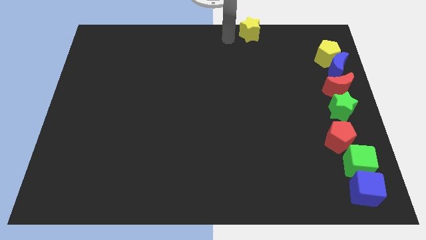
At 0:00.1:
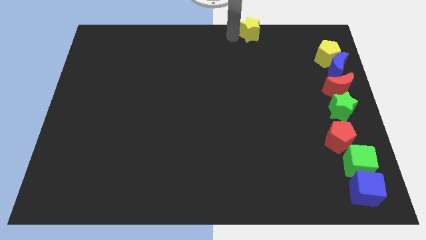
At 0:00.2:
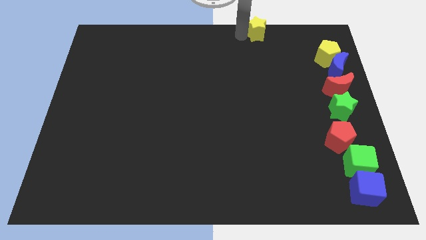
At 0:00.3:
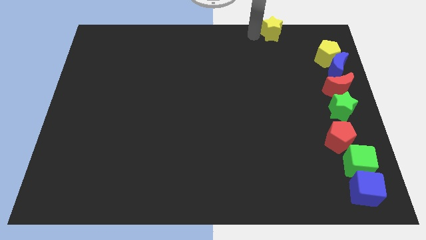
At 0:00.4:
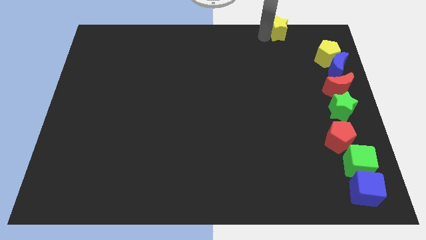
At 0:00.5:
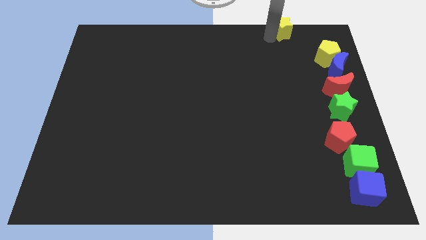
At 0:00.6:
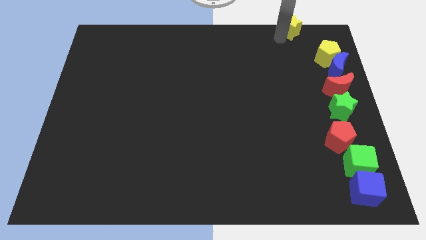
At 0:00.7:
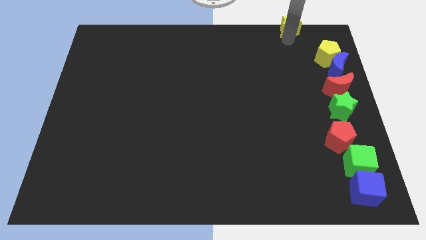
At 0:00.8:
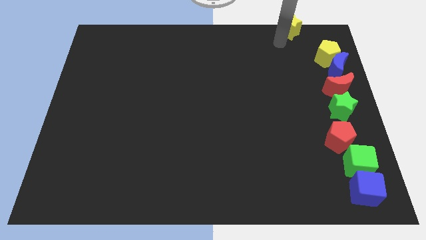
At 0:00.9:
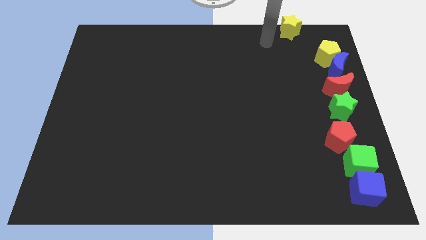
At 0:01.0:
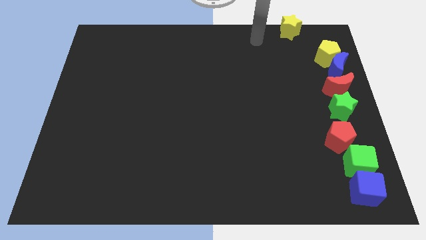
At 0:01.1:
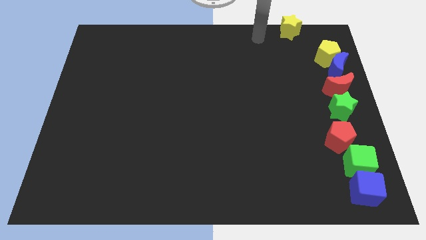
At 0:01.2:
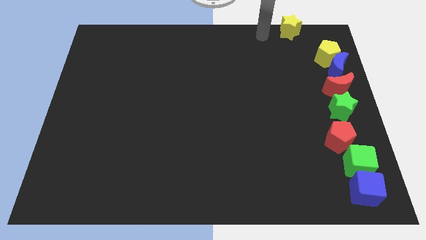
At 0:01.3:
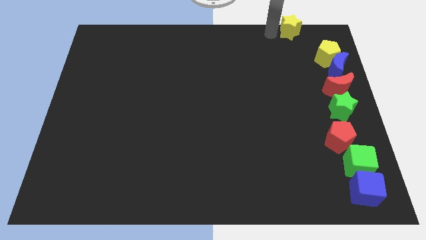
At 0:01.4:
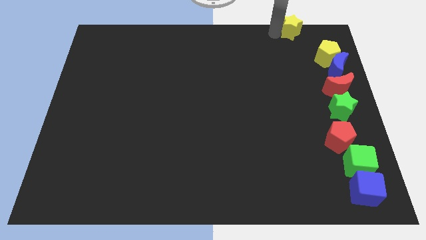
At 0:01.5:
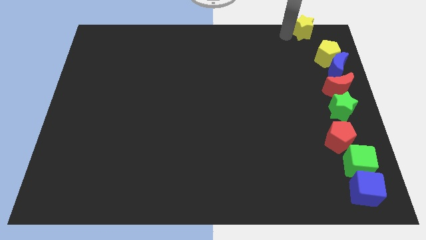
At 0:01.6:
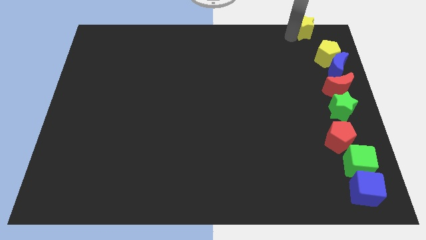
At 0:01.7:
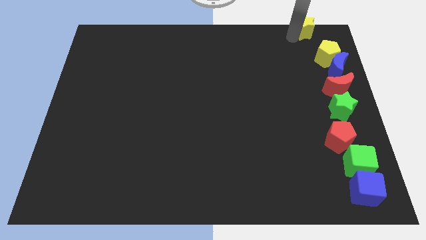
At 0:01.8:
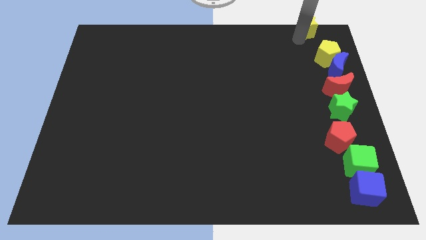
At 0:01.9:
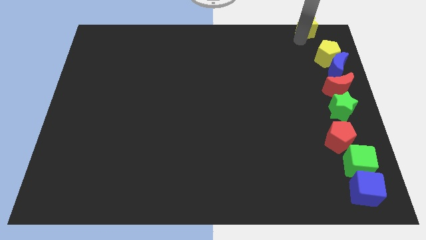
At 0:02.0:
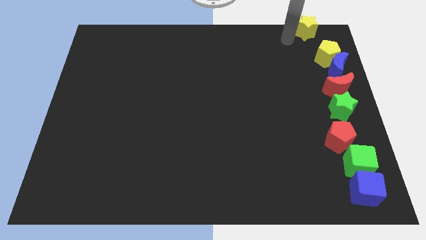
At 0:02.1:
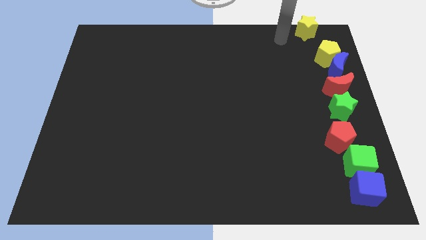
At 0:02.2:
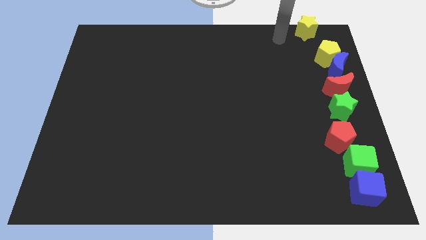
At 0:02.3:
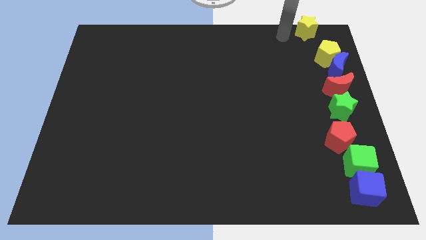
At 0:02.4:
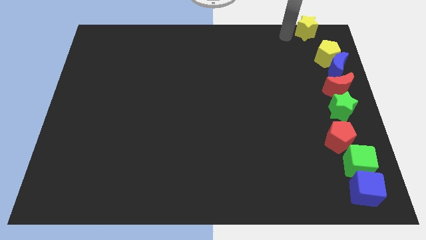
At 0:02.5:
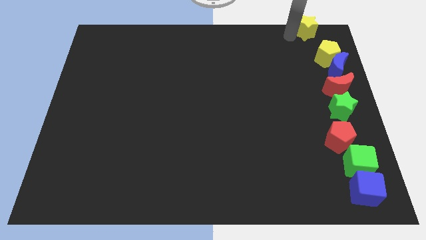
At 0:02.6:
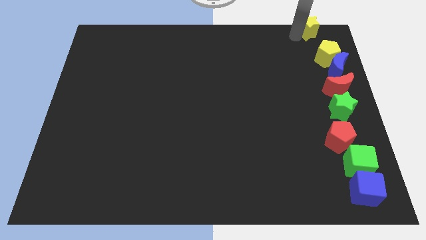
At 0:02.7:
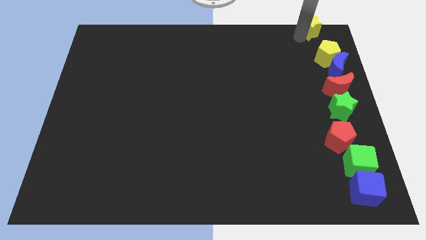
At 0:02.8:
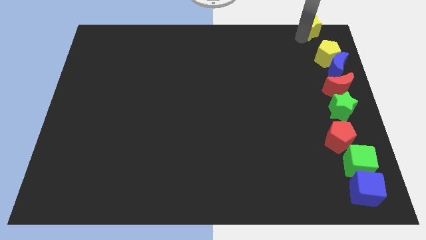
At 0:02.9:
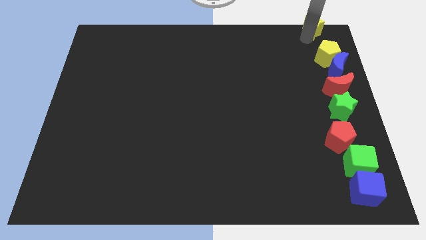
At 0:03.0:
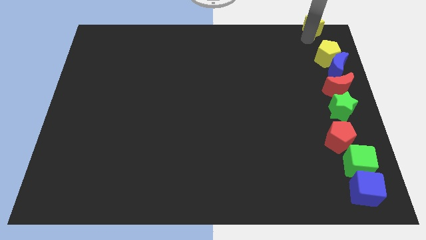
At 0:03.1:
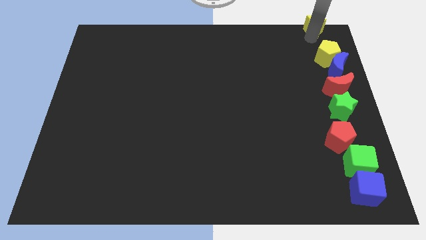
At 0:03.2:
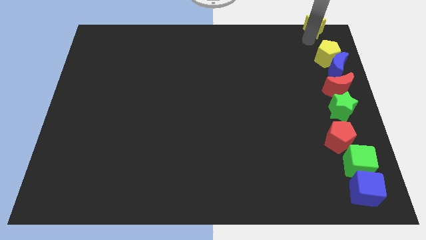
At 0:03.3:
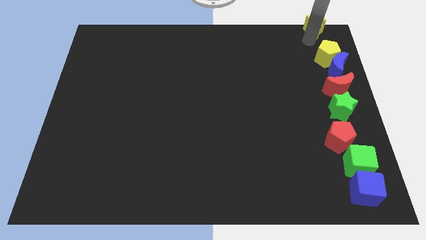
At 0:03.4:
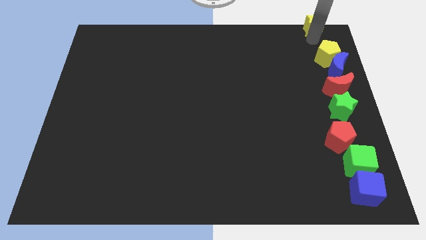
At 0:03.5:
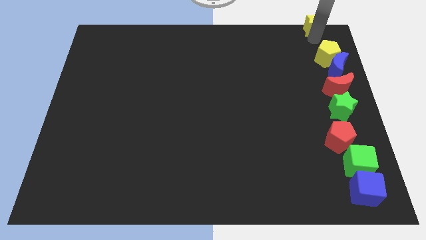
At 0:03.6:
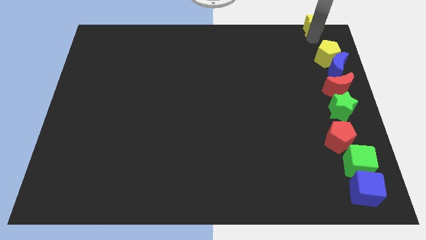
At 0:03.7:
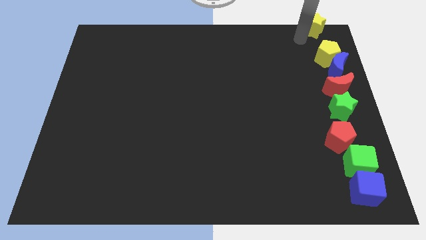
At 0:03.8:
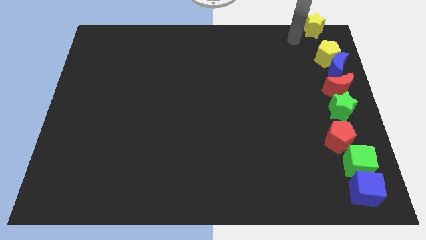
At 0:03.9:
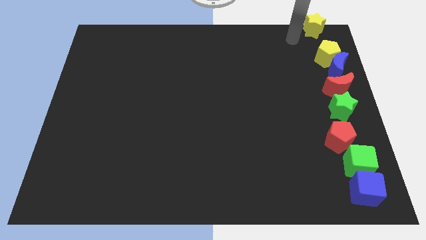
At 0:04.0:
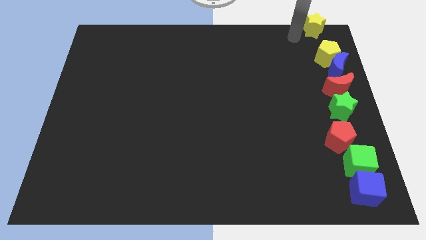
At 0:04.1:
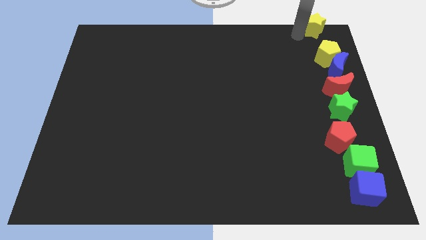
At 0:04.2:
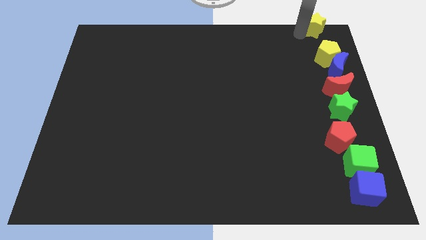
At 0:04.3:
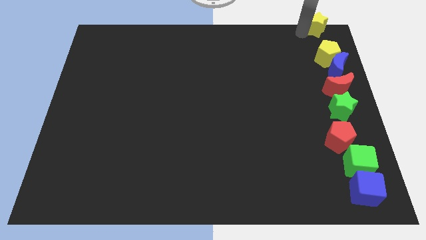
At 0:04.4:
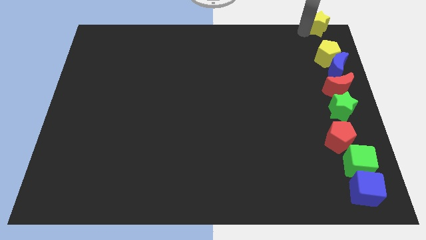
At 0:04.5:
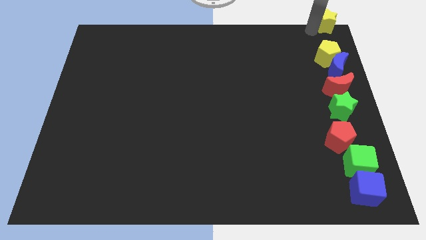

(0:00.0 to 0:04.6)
move the yellow star to the top right side of the board

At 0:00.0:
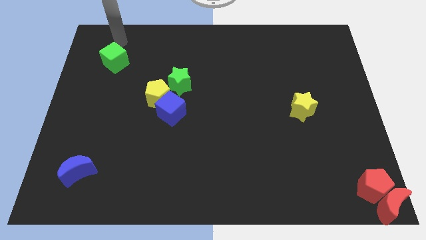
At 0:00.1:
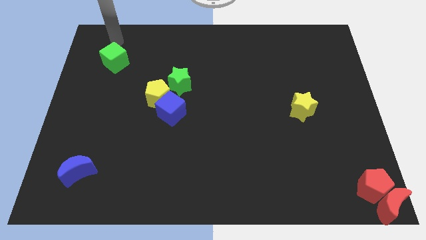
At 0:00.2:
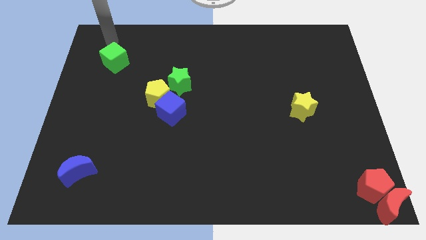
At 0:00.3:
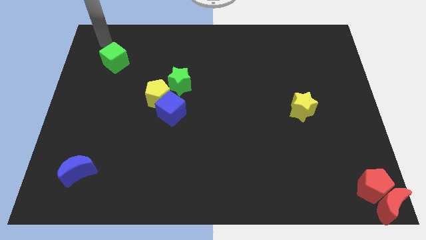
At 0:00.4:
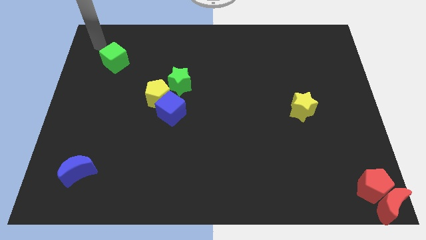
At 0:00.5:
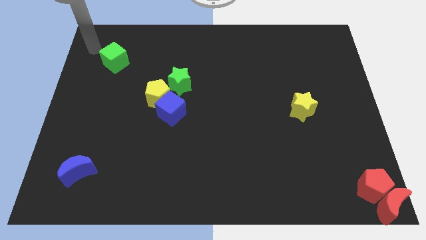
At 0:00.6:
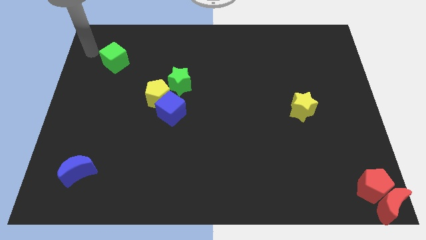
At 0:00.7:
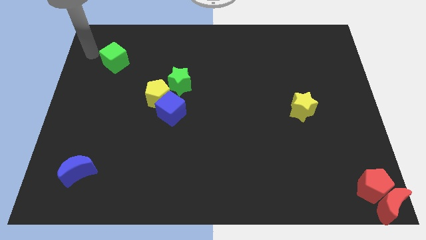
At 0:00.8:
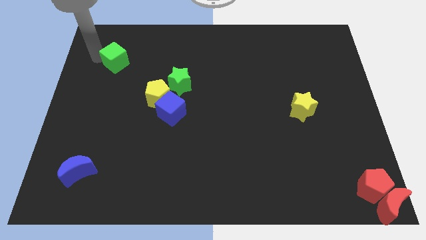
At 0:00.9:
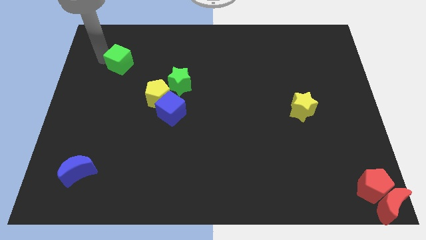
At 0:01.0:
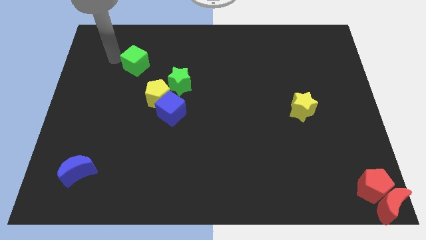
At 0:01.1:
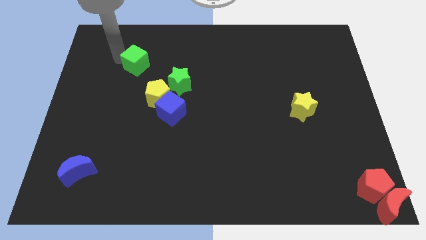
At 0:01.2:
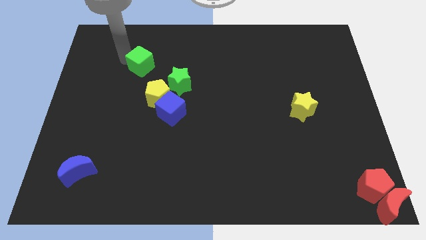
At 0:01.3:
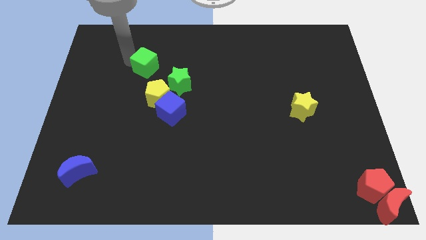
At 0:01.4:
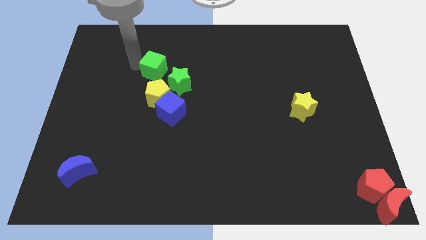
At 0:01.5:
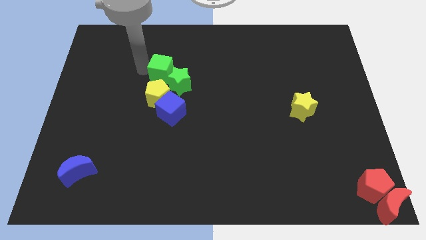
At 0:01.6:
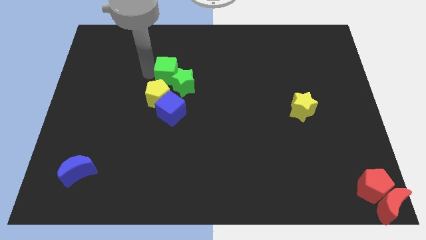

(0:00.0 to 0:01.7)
move green cube into green star

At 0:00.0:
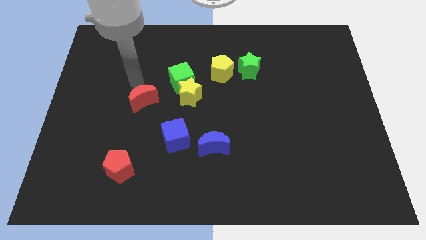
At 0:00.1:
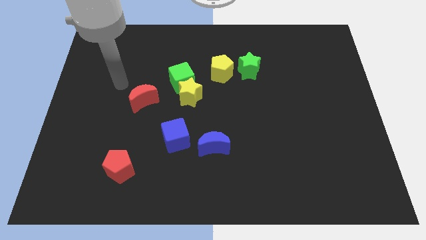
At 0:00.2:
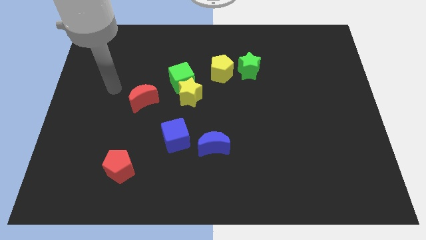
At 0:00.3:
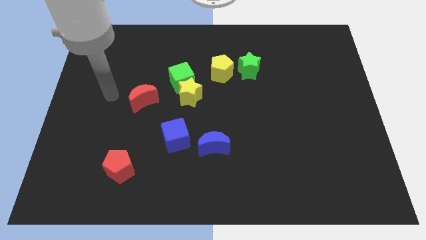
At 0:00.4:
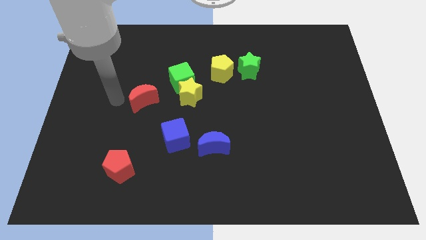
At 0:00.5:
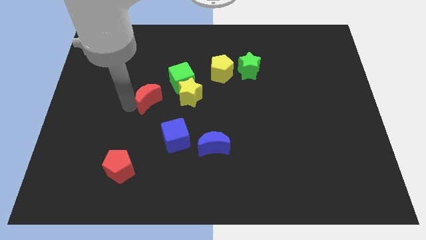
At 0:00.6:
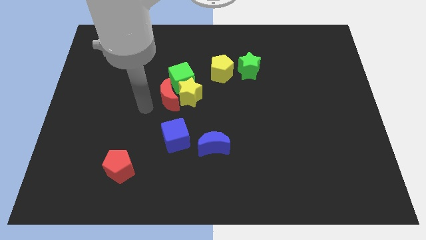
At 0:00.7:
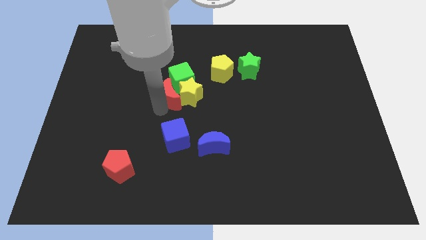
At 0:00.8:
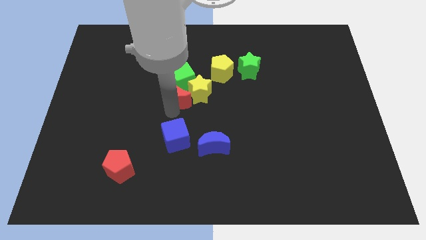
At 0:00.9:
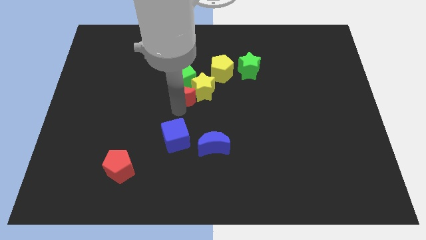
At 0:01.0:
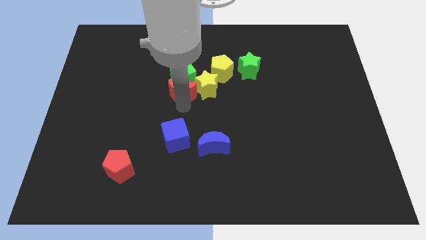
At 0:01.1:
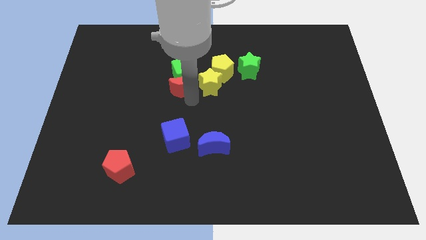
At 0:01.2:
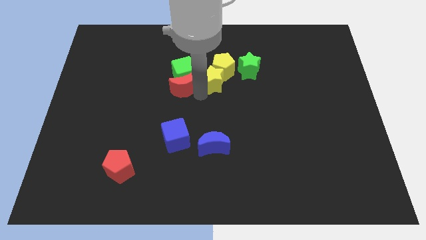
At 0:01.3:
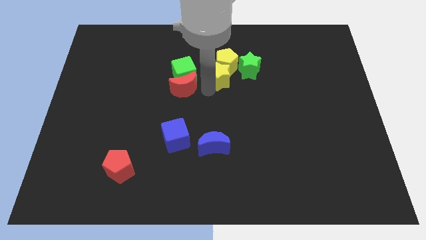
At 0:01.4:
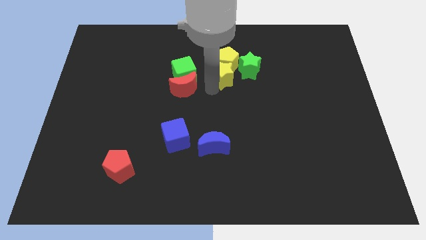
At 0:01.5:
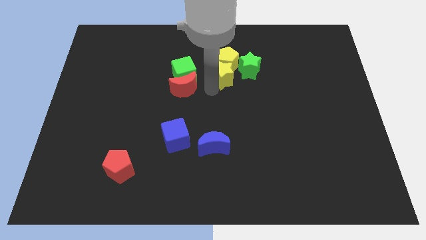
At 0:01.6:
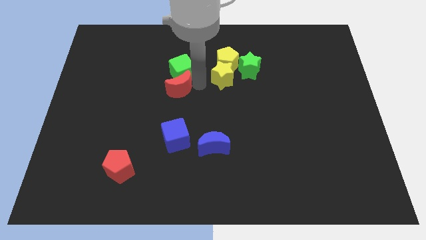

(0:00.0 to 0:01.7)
place the red crescent at the bottom of the green cube

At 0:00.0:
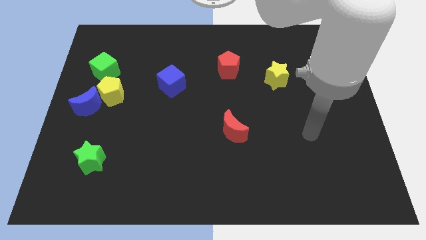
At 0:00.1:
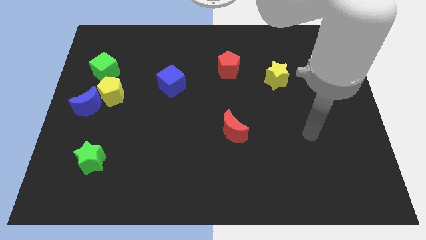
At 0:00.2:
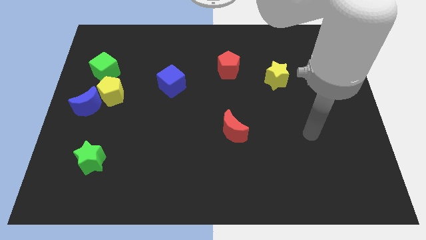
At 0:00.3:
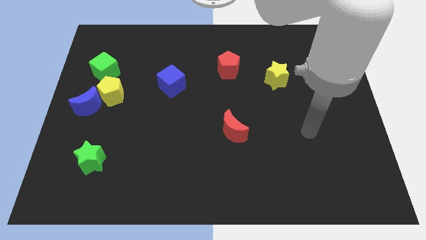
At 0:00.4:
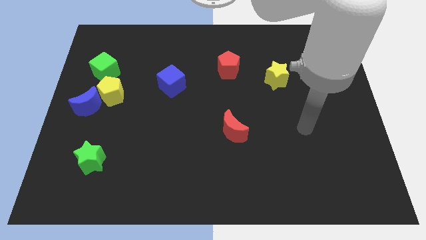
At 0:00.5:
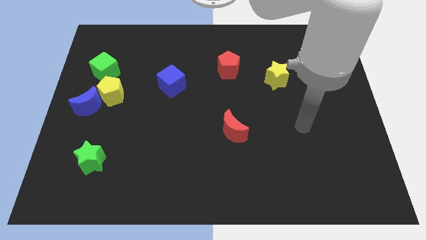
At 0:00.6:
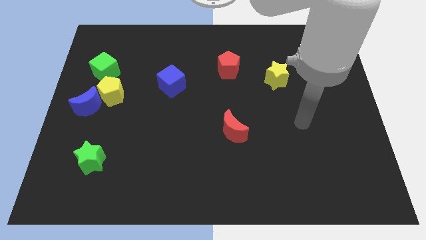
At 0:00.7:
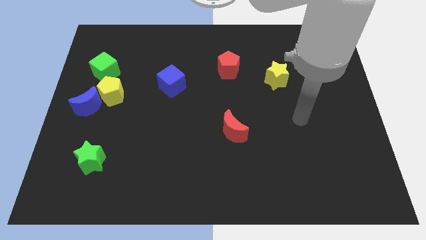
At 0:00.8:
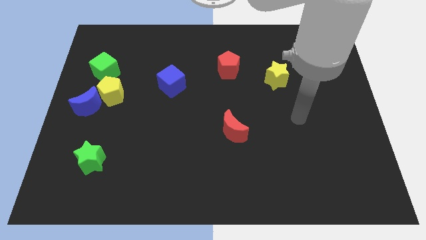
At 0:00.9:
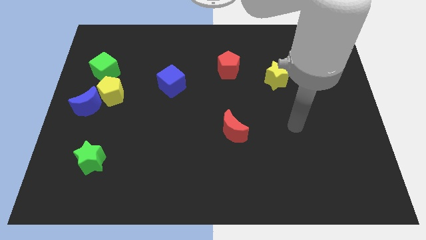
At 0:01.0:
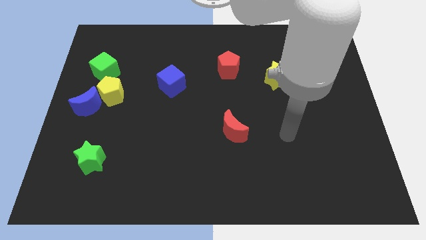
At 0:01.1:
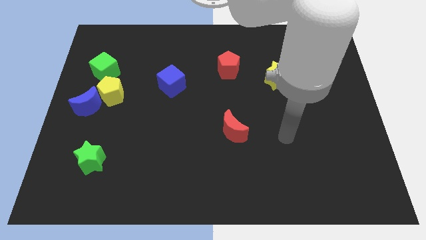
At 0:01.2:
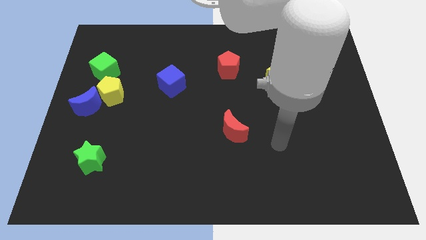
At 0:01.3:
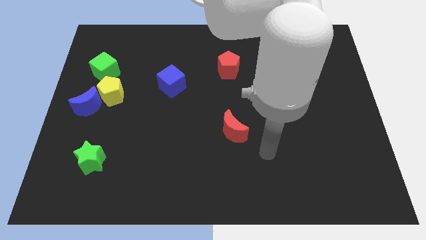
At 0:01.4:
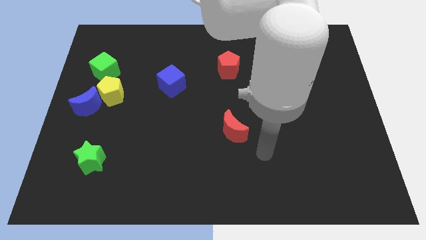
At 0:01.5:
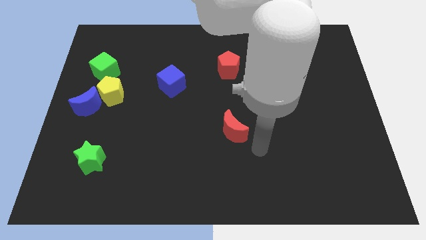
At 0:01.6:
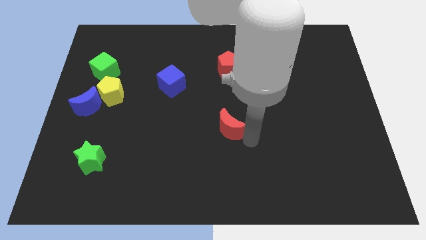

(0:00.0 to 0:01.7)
place your arm at the bottom right side of red moon
